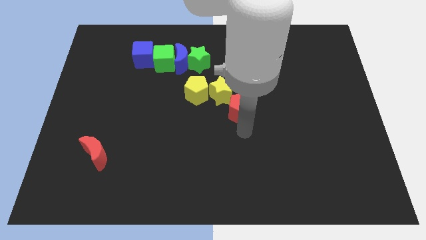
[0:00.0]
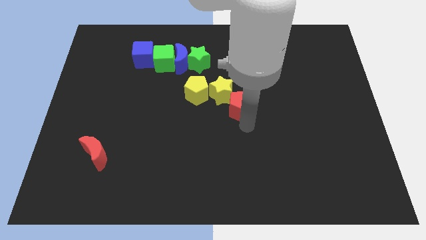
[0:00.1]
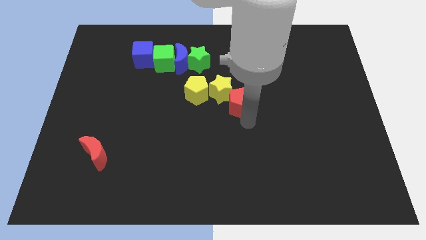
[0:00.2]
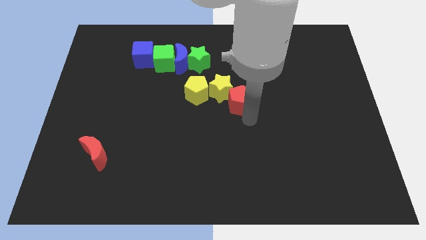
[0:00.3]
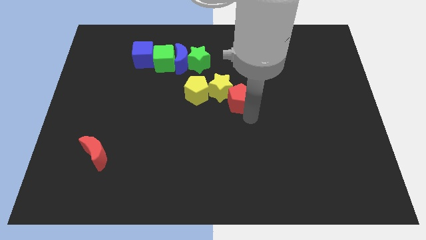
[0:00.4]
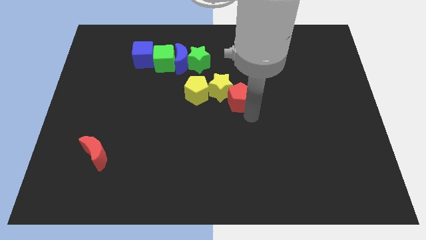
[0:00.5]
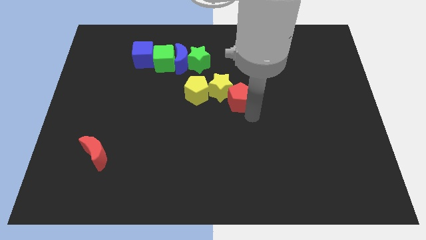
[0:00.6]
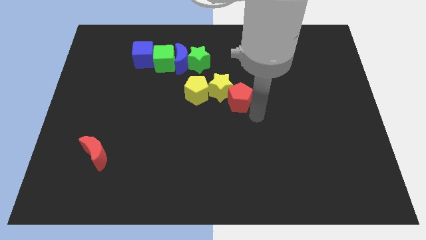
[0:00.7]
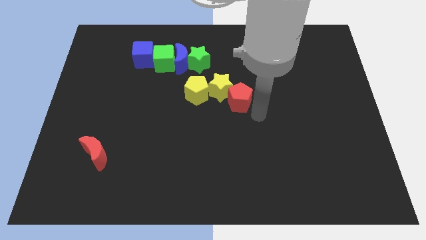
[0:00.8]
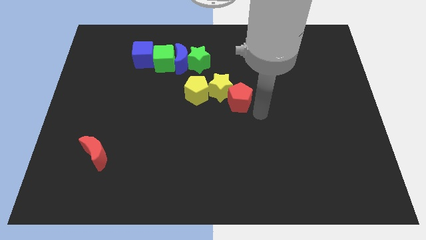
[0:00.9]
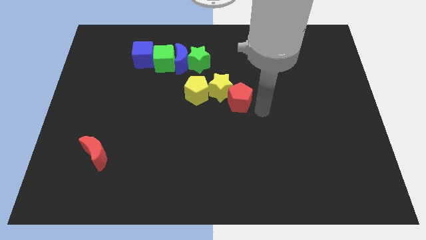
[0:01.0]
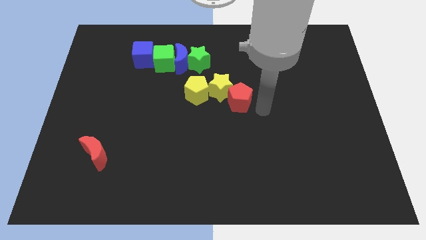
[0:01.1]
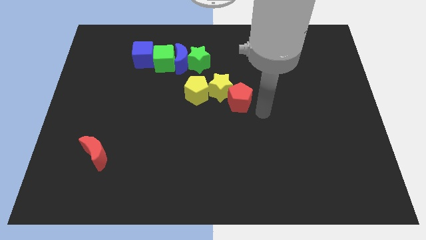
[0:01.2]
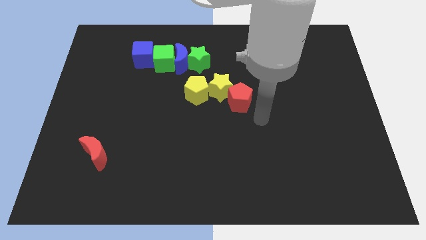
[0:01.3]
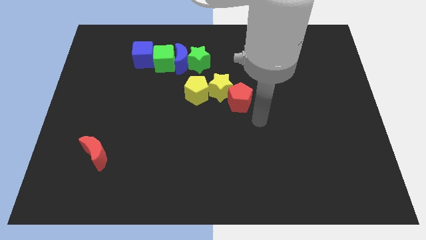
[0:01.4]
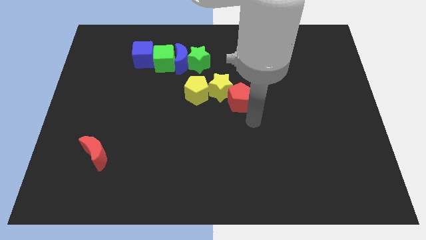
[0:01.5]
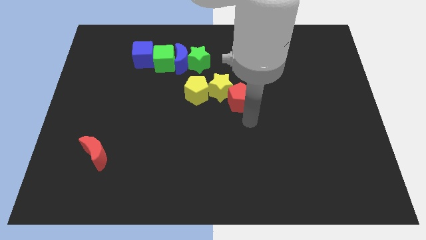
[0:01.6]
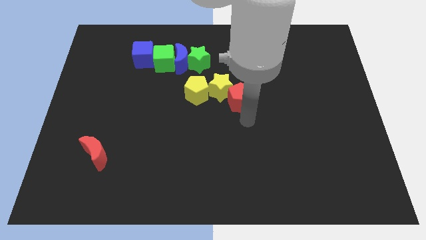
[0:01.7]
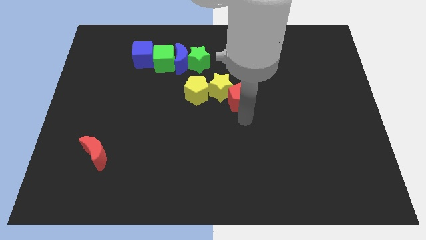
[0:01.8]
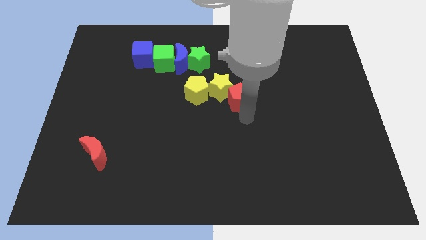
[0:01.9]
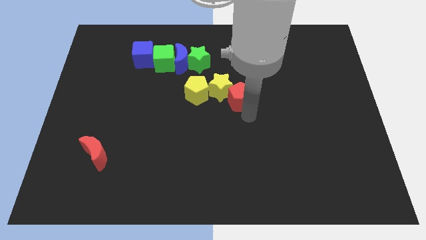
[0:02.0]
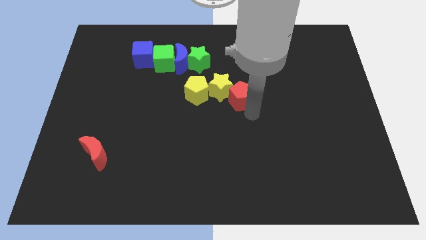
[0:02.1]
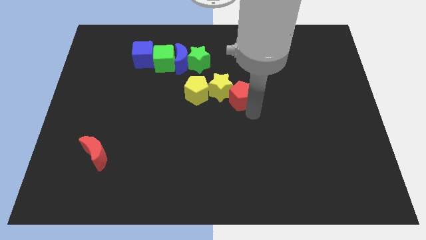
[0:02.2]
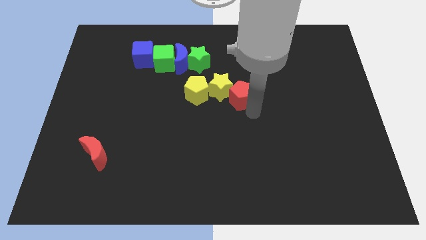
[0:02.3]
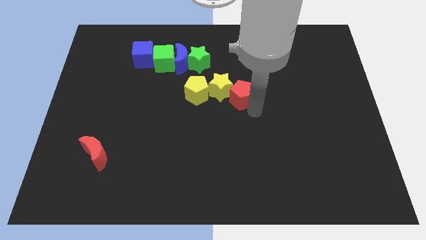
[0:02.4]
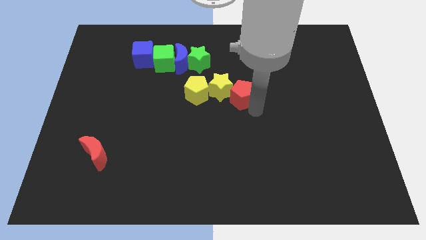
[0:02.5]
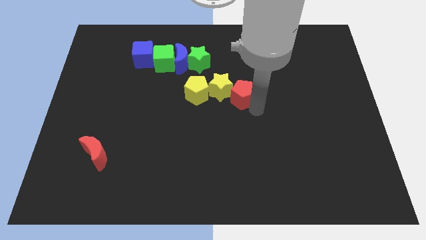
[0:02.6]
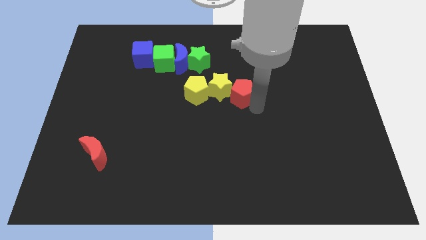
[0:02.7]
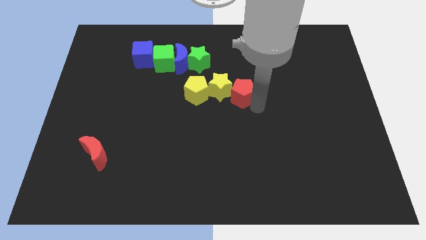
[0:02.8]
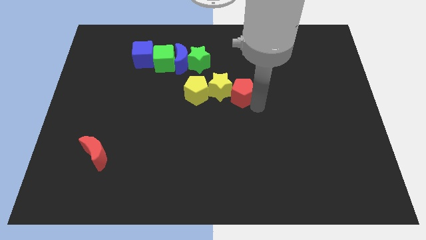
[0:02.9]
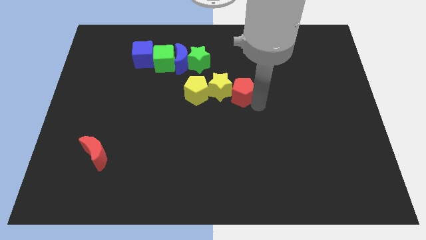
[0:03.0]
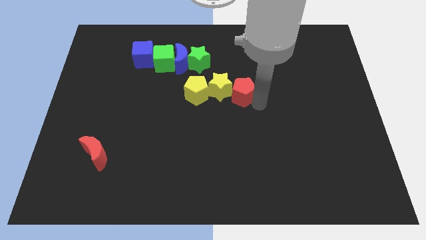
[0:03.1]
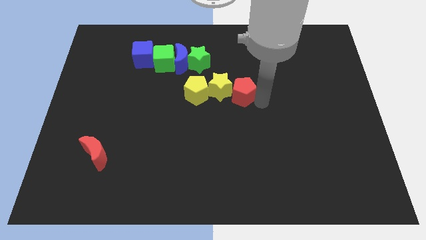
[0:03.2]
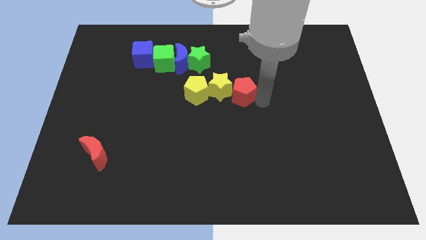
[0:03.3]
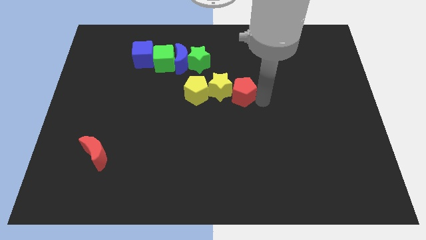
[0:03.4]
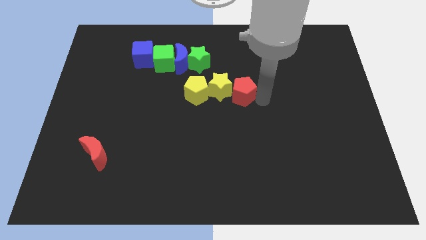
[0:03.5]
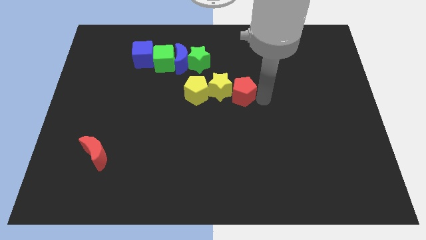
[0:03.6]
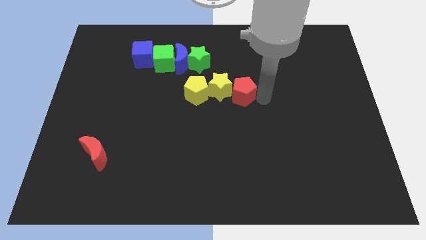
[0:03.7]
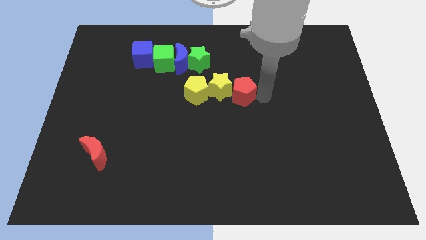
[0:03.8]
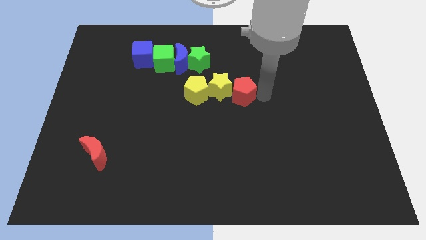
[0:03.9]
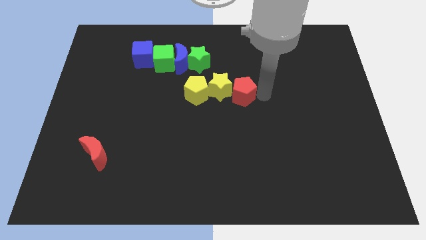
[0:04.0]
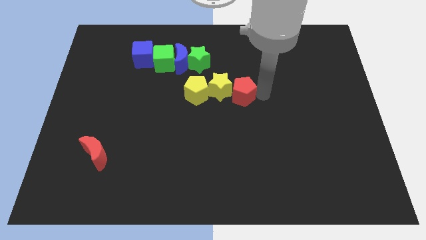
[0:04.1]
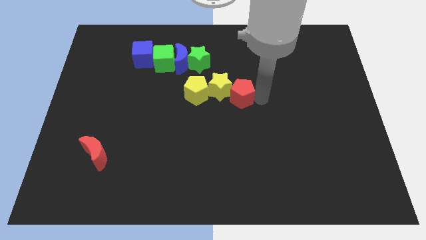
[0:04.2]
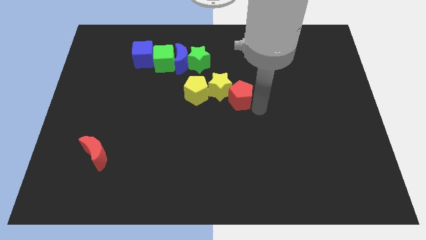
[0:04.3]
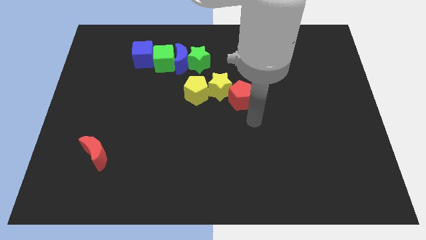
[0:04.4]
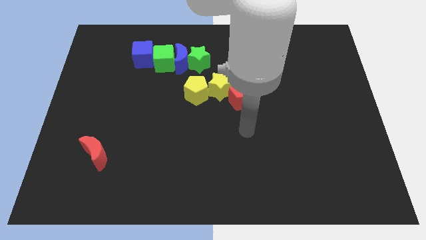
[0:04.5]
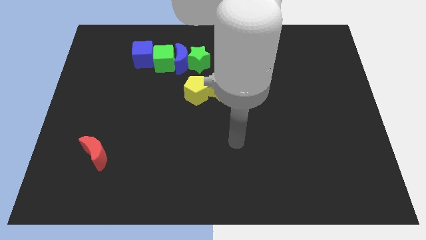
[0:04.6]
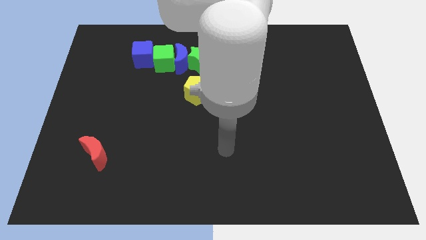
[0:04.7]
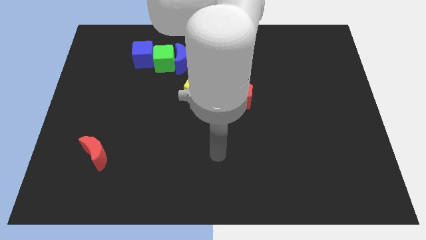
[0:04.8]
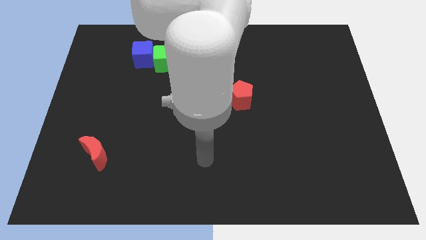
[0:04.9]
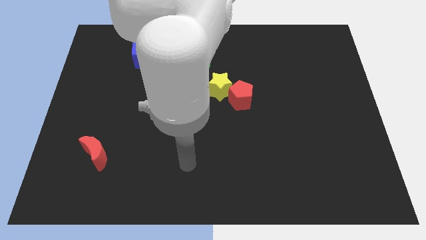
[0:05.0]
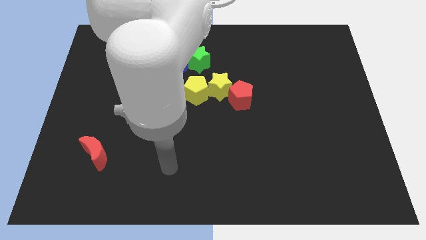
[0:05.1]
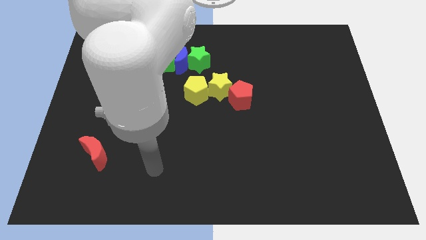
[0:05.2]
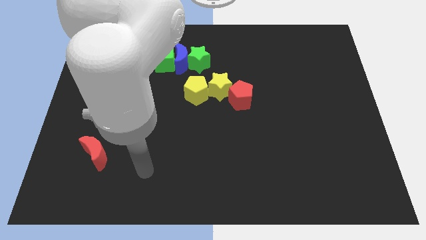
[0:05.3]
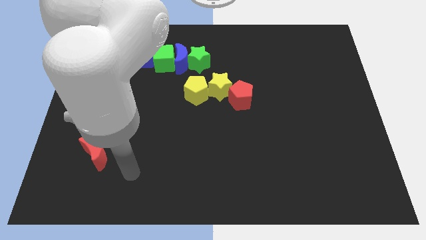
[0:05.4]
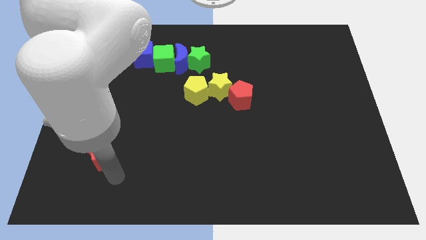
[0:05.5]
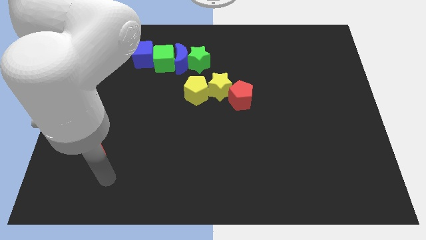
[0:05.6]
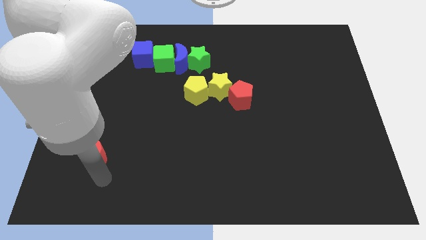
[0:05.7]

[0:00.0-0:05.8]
slightly push the red pentagon into the yellow star

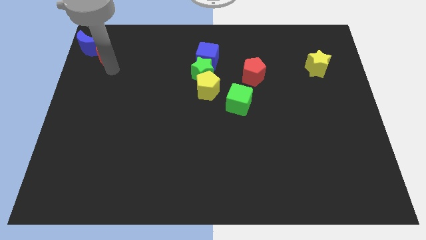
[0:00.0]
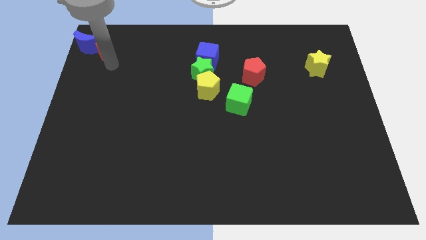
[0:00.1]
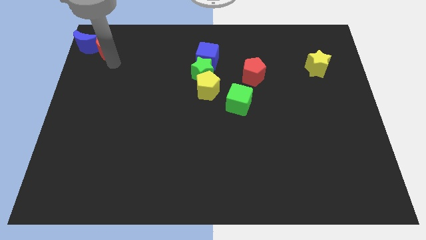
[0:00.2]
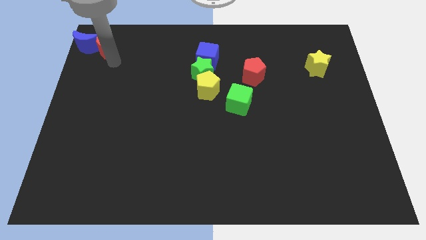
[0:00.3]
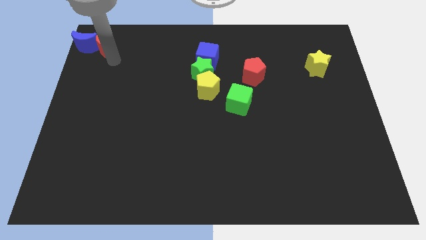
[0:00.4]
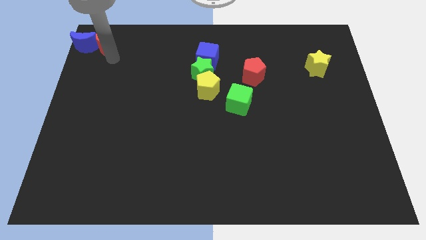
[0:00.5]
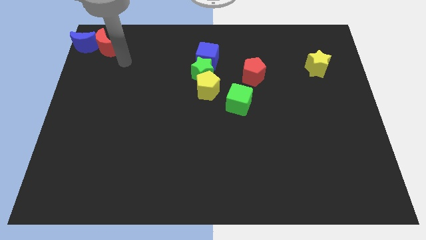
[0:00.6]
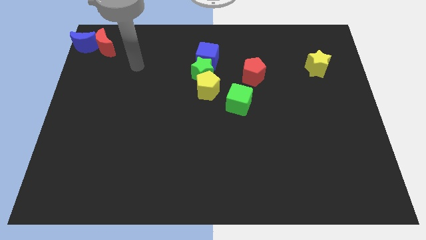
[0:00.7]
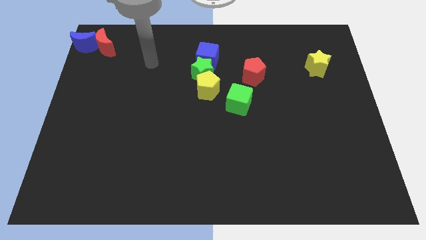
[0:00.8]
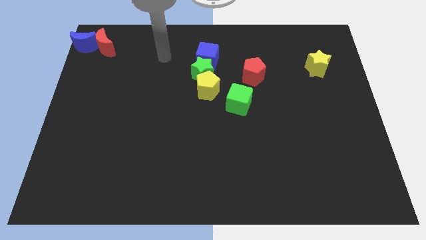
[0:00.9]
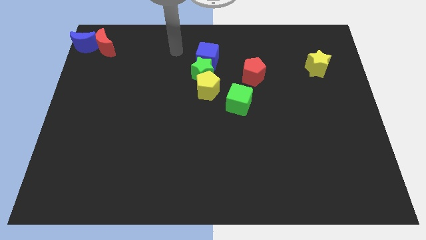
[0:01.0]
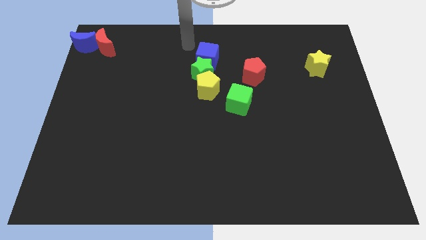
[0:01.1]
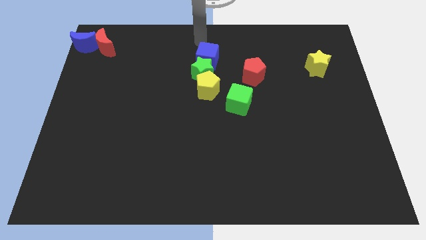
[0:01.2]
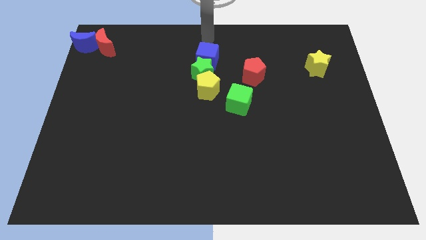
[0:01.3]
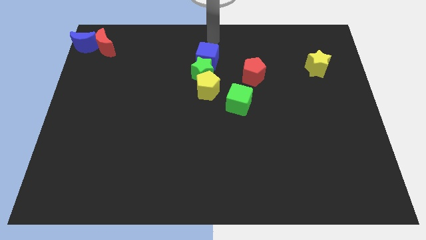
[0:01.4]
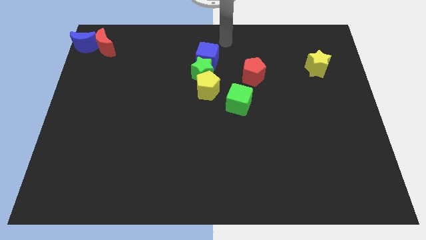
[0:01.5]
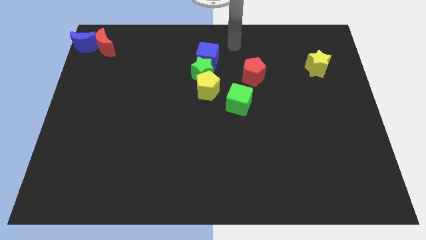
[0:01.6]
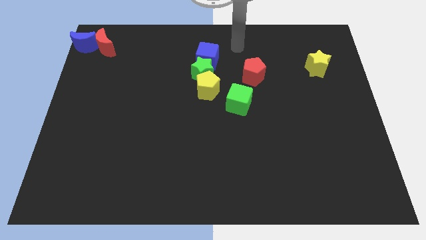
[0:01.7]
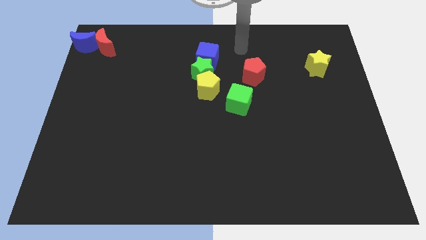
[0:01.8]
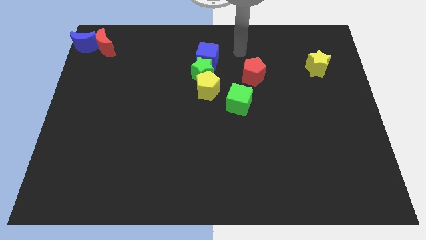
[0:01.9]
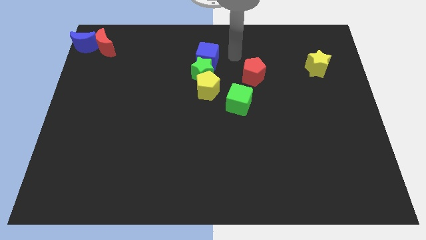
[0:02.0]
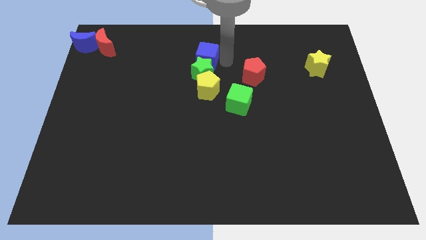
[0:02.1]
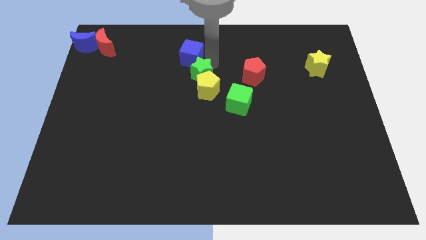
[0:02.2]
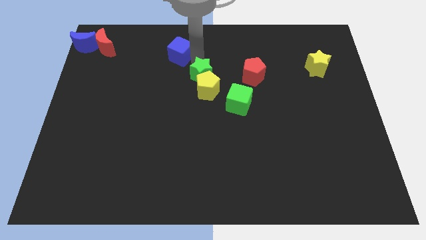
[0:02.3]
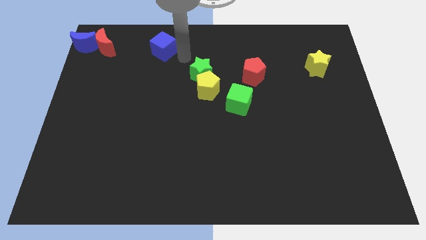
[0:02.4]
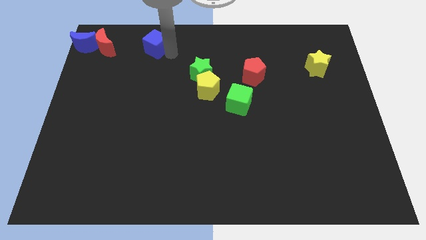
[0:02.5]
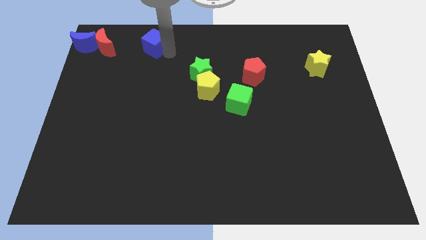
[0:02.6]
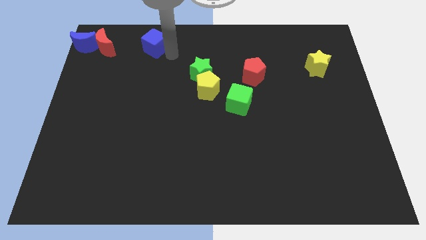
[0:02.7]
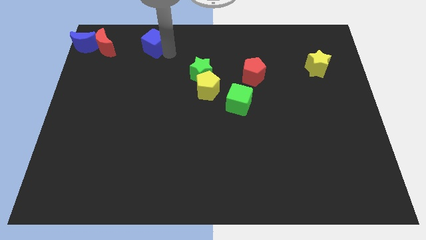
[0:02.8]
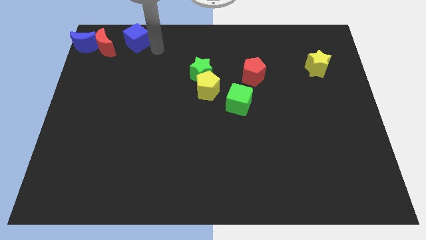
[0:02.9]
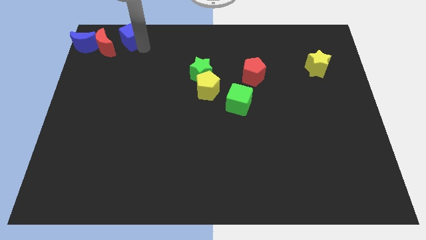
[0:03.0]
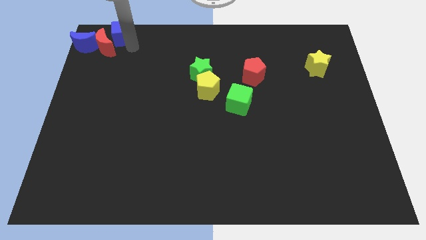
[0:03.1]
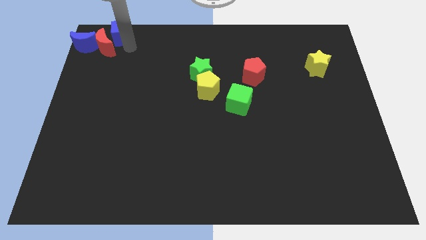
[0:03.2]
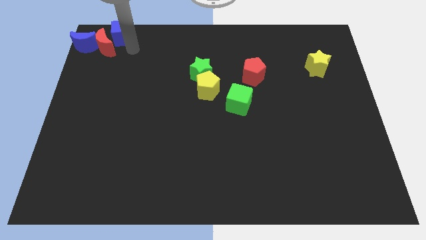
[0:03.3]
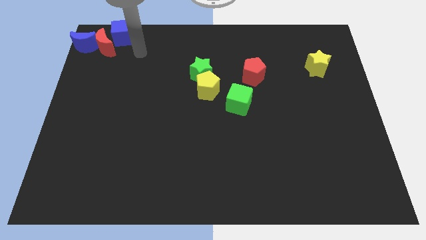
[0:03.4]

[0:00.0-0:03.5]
slide the blue cube to the top left of the red crescent
